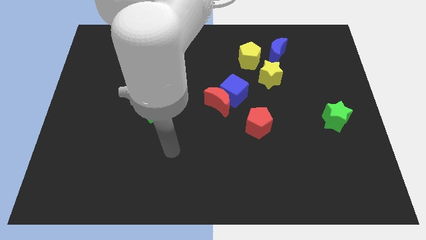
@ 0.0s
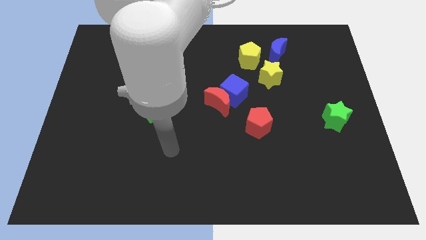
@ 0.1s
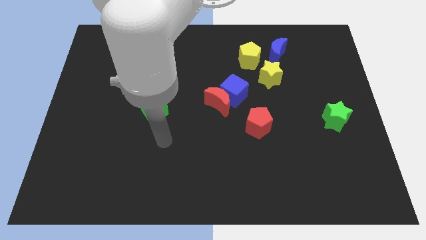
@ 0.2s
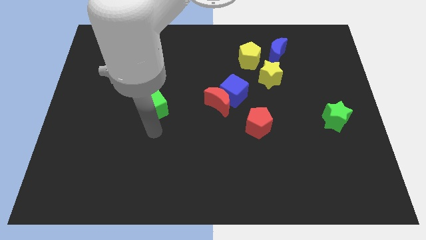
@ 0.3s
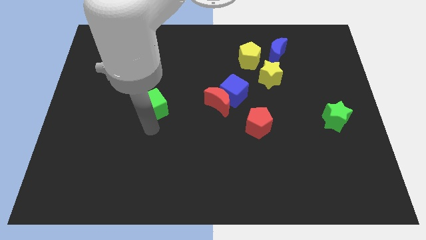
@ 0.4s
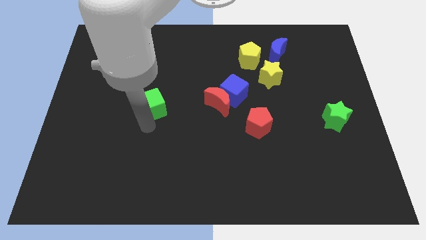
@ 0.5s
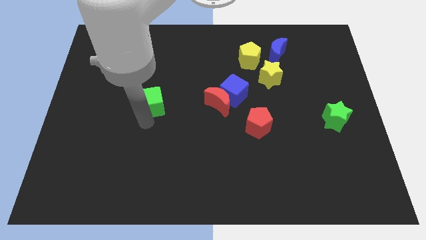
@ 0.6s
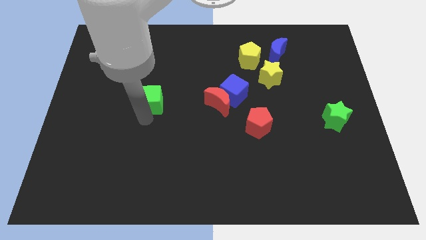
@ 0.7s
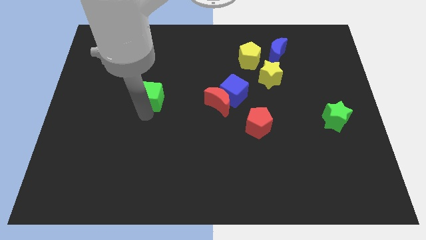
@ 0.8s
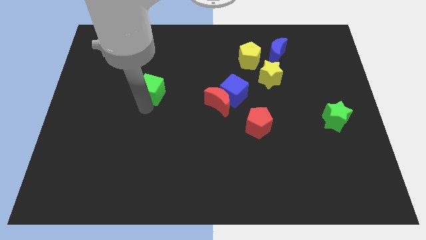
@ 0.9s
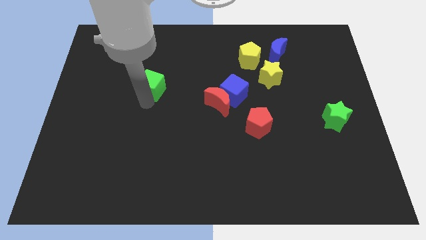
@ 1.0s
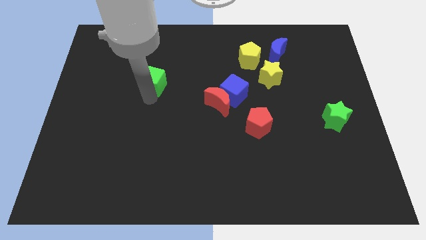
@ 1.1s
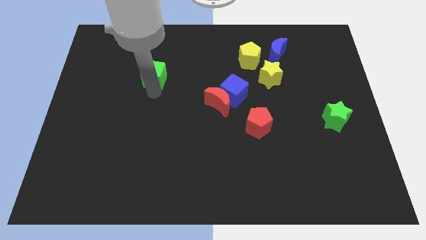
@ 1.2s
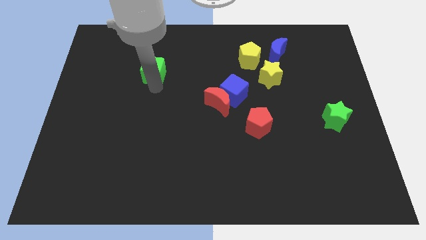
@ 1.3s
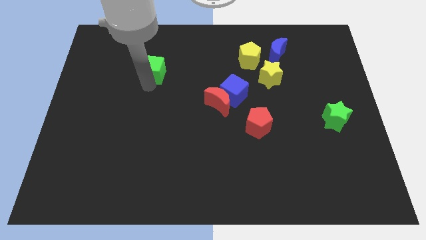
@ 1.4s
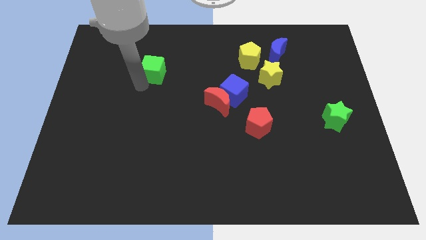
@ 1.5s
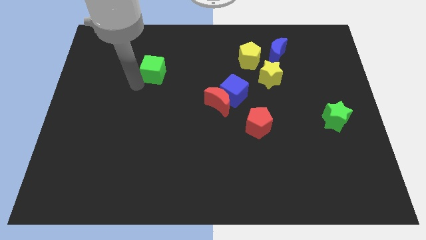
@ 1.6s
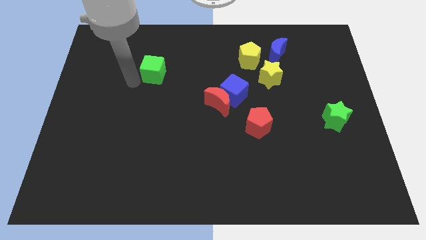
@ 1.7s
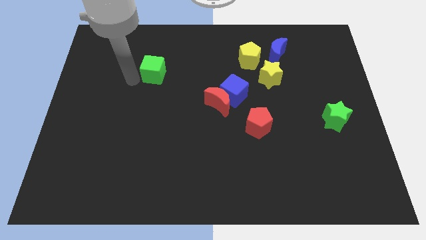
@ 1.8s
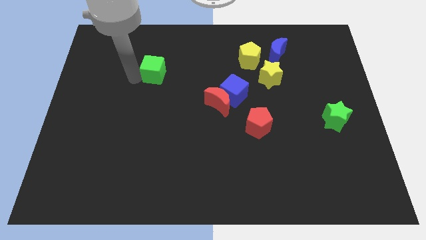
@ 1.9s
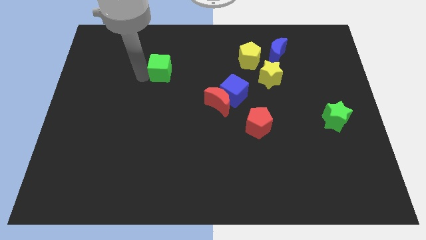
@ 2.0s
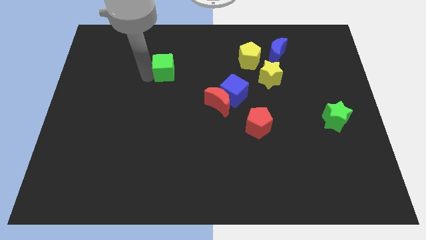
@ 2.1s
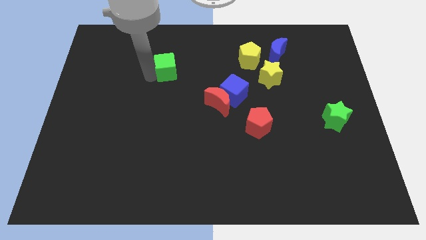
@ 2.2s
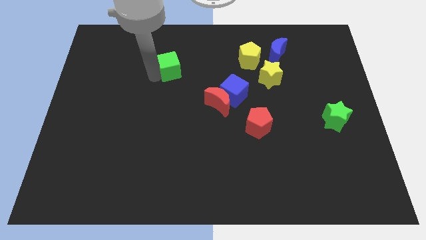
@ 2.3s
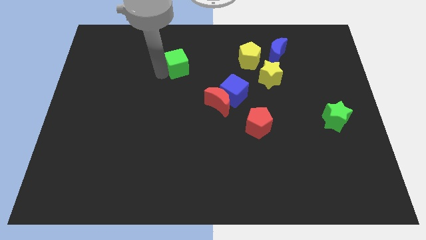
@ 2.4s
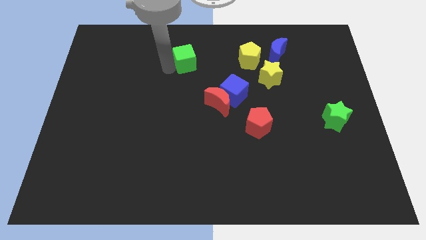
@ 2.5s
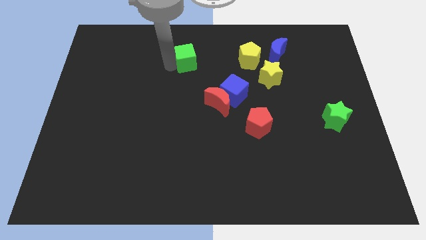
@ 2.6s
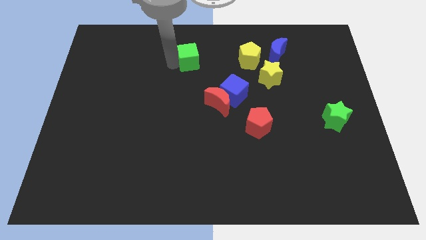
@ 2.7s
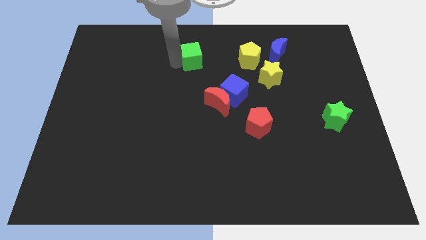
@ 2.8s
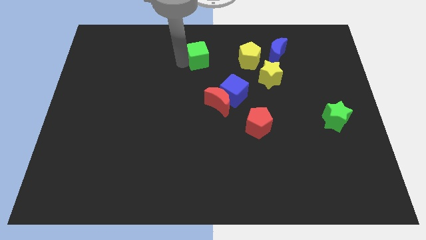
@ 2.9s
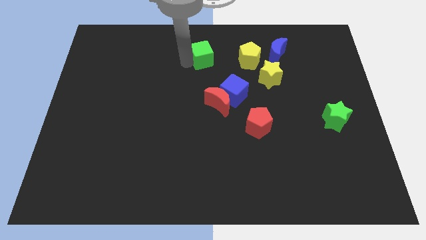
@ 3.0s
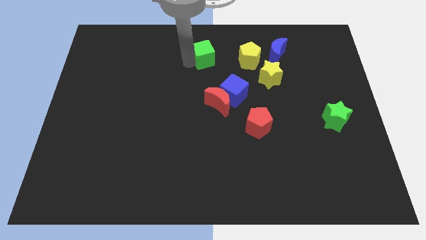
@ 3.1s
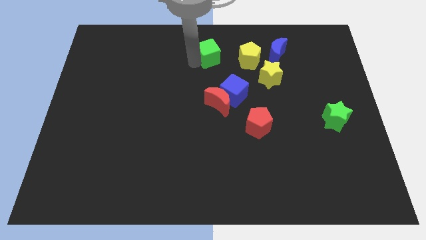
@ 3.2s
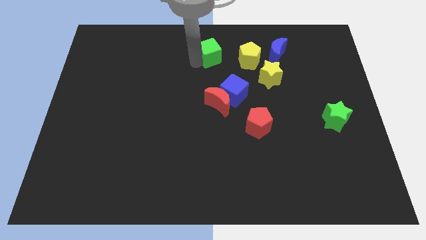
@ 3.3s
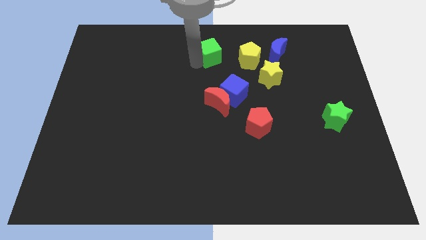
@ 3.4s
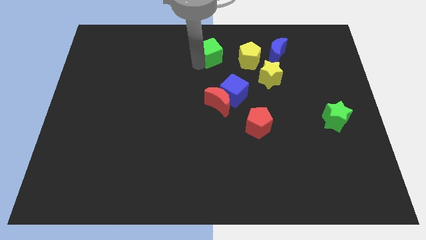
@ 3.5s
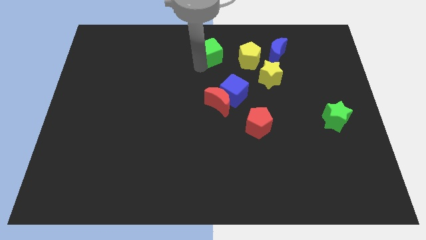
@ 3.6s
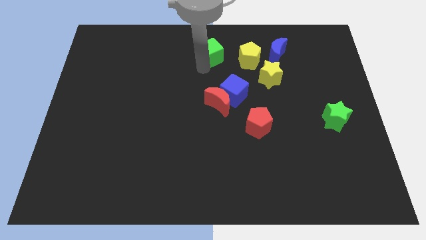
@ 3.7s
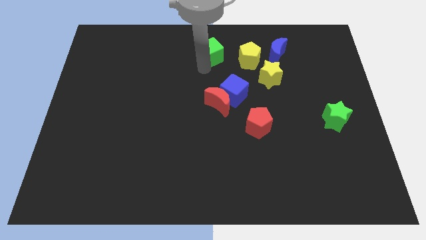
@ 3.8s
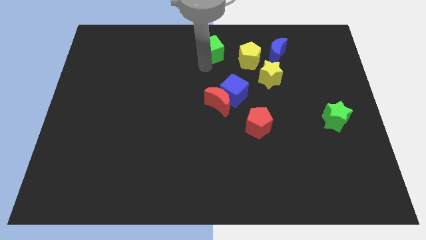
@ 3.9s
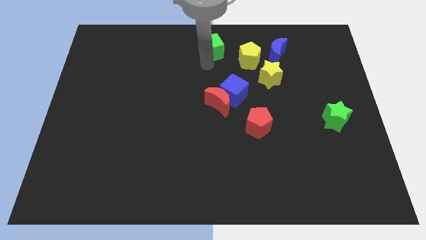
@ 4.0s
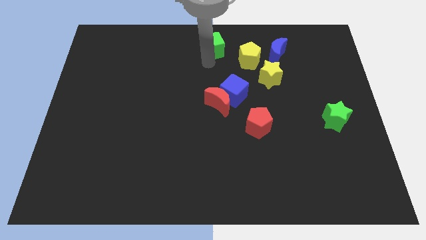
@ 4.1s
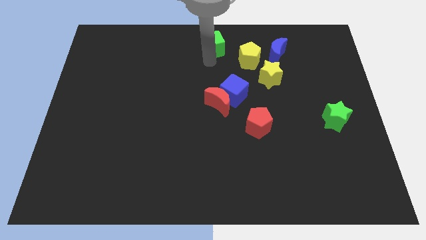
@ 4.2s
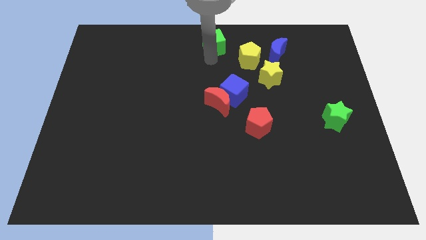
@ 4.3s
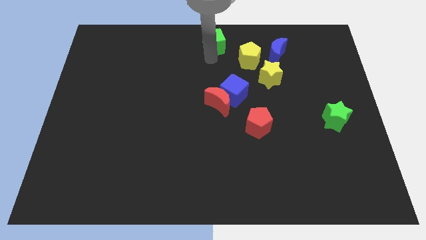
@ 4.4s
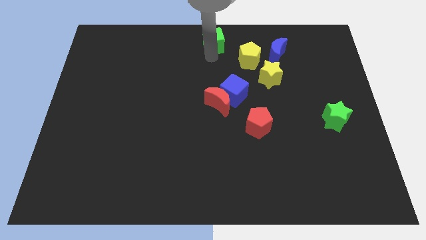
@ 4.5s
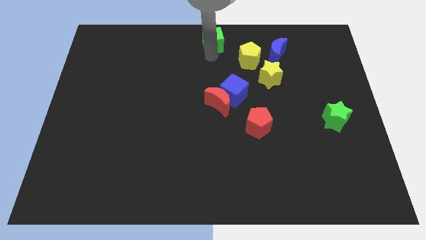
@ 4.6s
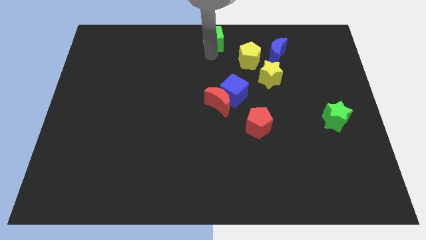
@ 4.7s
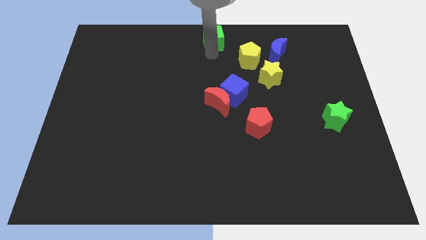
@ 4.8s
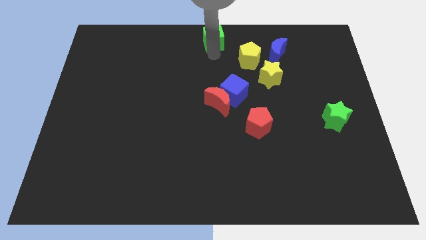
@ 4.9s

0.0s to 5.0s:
push green cube towards the top center of the board

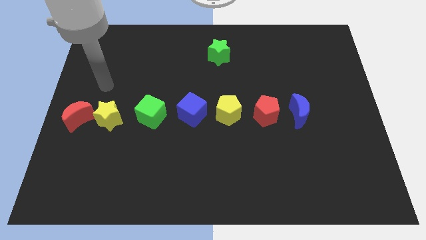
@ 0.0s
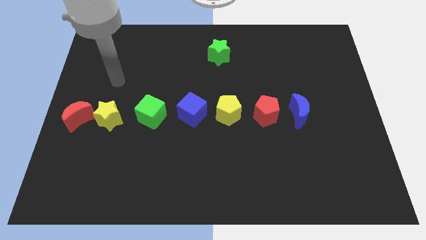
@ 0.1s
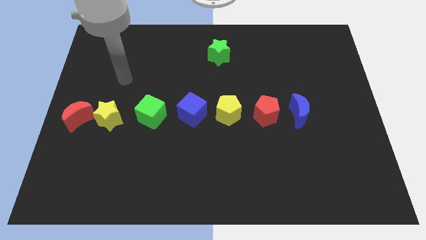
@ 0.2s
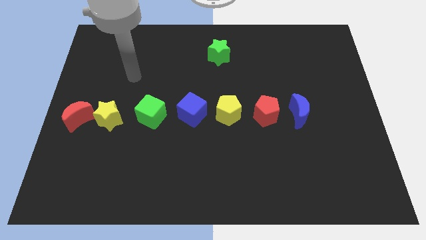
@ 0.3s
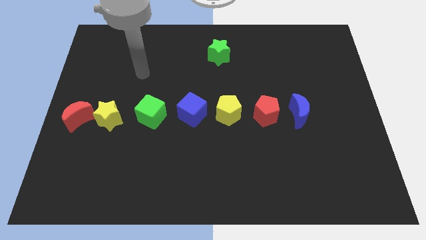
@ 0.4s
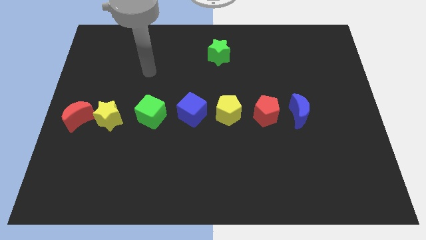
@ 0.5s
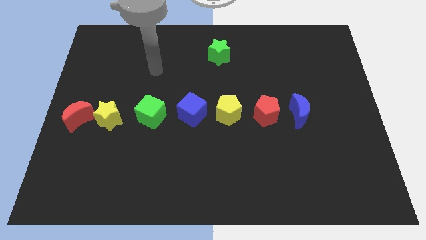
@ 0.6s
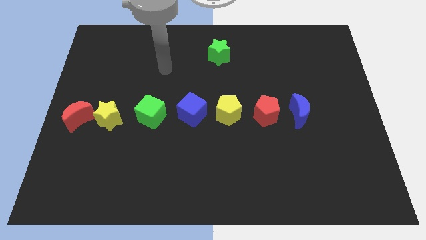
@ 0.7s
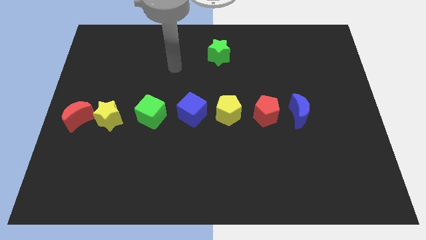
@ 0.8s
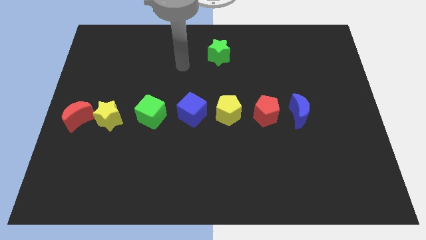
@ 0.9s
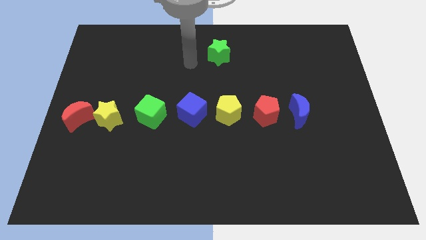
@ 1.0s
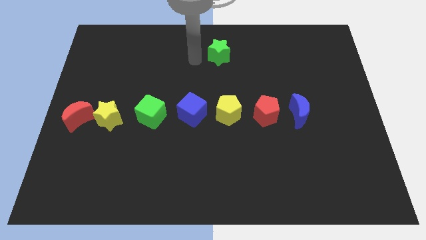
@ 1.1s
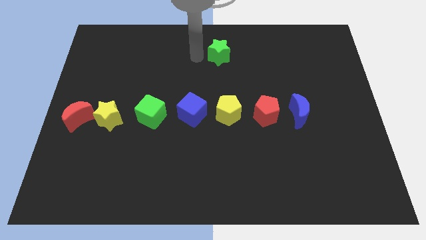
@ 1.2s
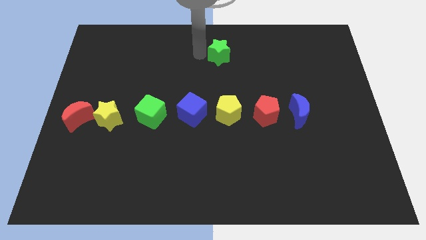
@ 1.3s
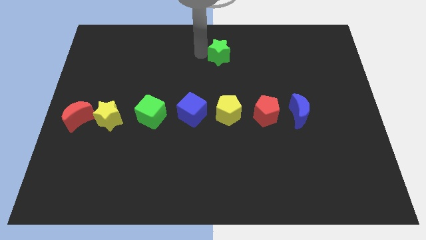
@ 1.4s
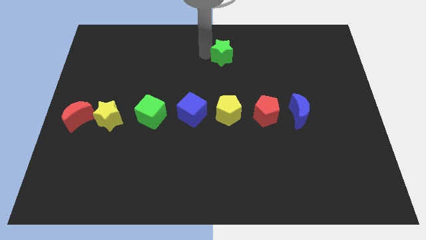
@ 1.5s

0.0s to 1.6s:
push the arm into the green star

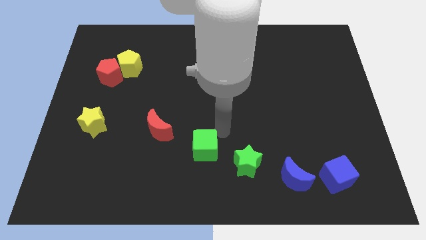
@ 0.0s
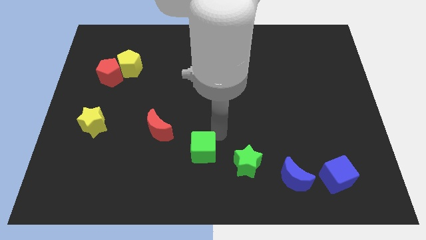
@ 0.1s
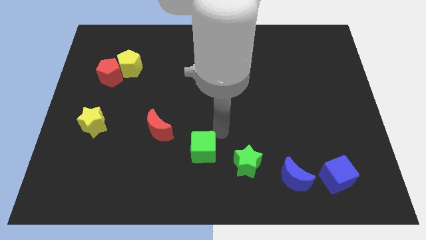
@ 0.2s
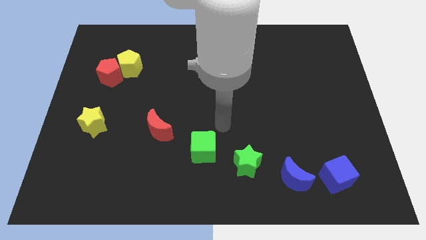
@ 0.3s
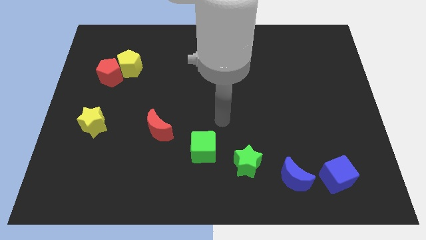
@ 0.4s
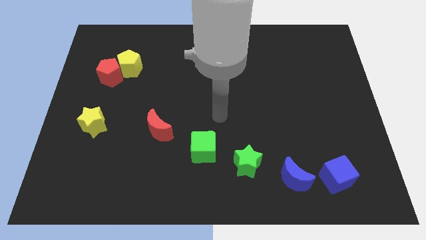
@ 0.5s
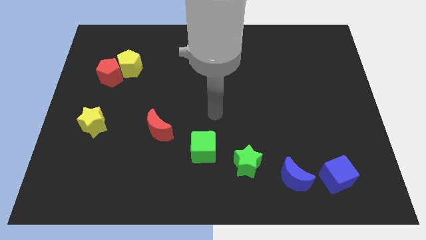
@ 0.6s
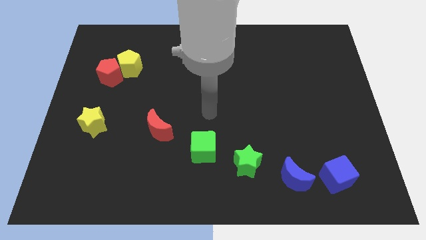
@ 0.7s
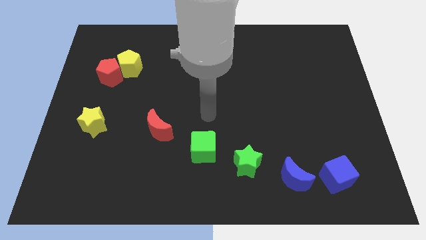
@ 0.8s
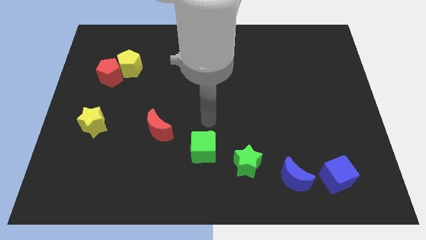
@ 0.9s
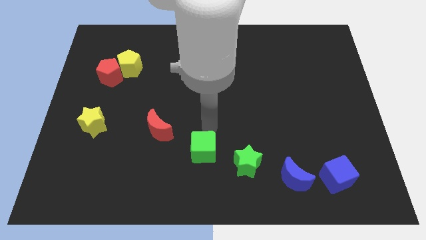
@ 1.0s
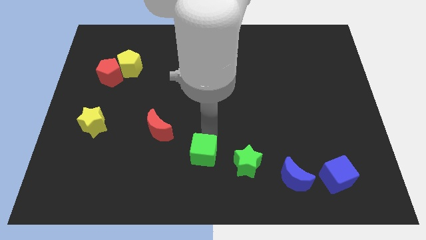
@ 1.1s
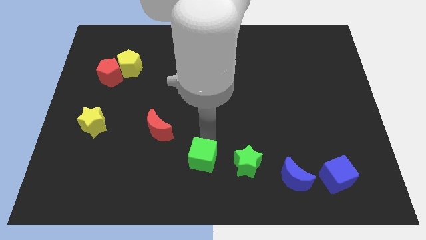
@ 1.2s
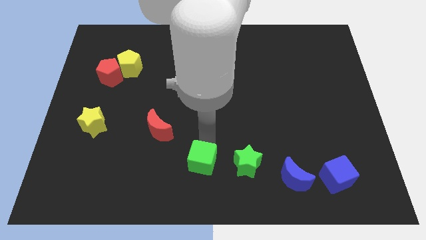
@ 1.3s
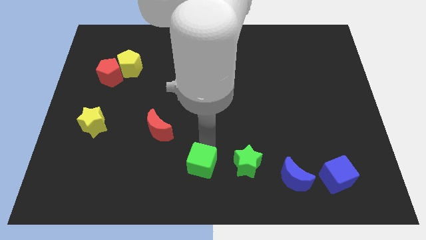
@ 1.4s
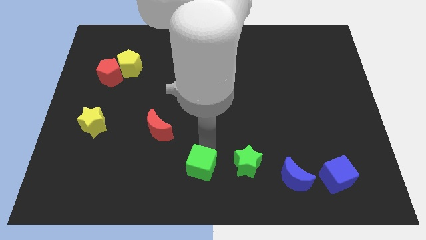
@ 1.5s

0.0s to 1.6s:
place the green cube towards the left of the green star

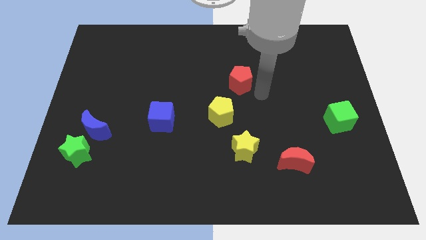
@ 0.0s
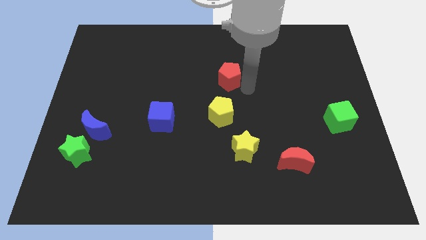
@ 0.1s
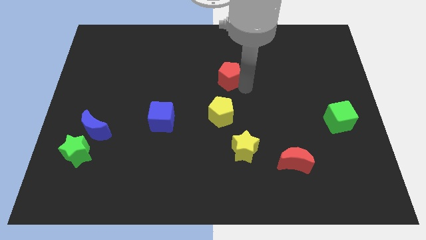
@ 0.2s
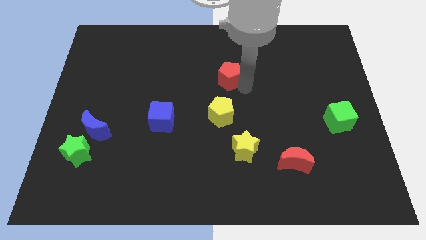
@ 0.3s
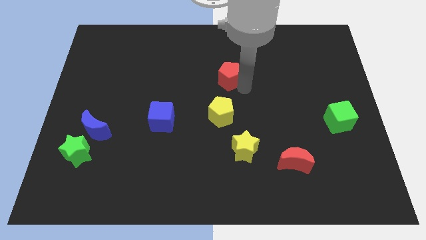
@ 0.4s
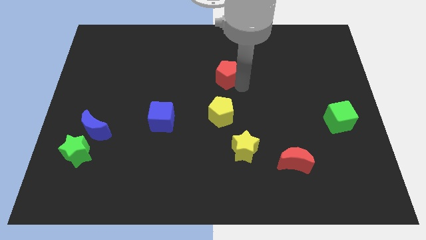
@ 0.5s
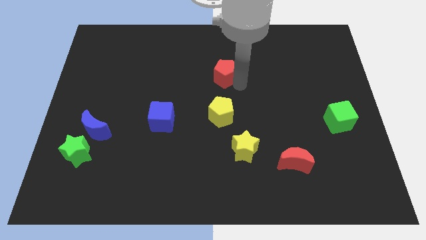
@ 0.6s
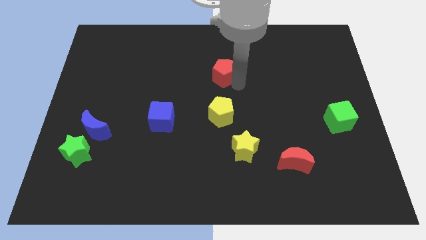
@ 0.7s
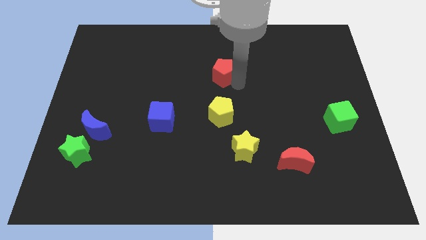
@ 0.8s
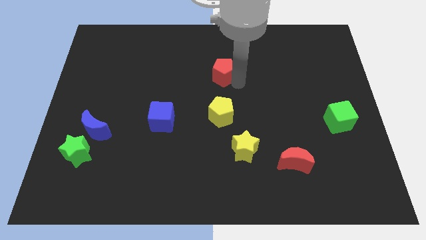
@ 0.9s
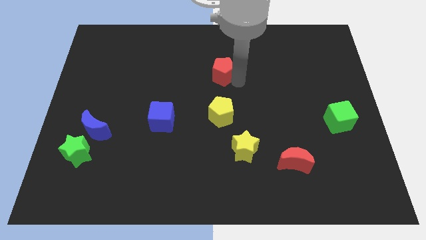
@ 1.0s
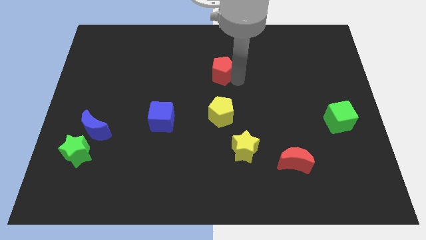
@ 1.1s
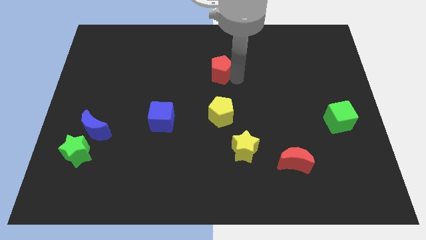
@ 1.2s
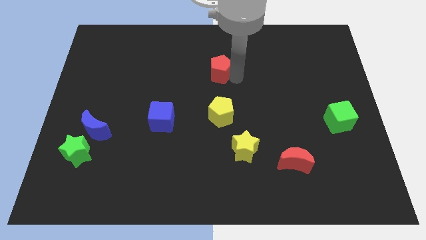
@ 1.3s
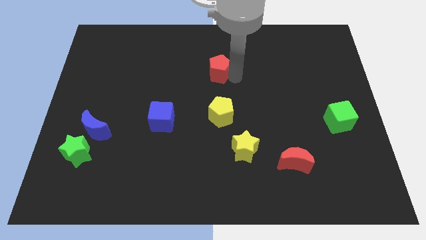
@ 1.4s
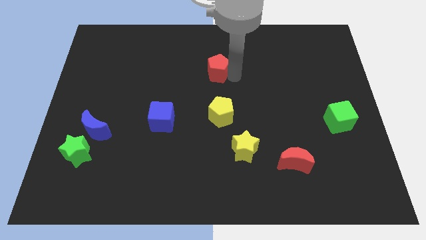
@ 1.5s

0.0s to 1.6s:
put the red pentagon vertically above the yellow pentagon
